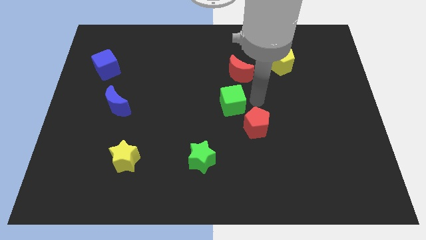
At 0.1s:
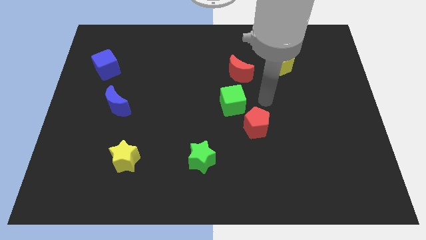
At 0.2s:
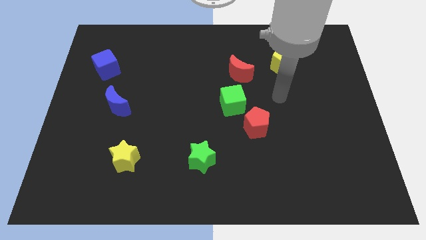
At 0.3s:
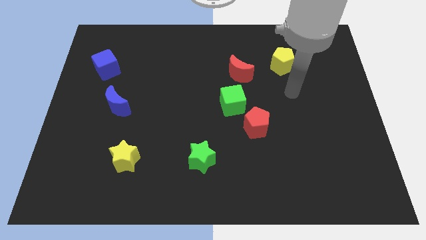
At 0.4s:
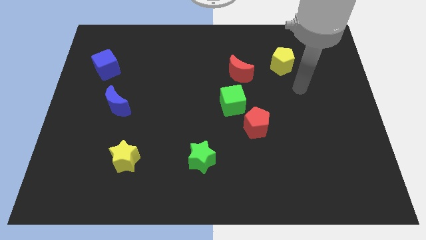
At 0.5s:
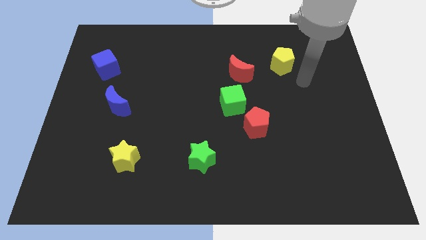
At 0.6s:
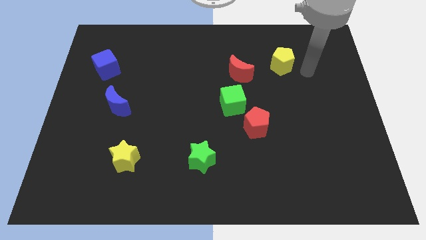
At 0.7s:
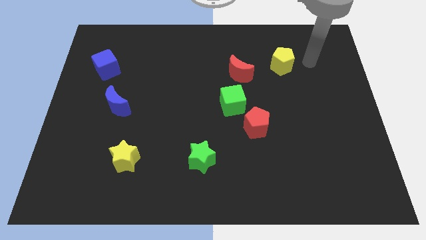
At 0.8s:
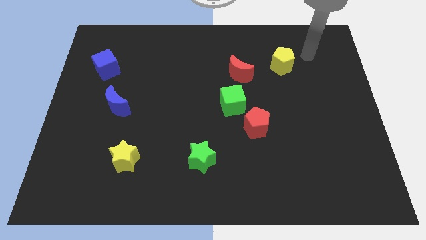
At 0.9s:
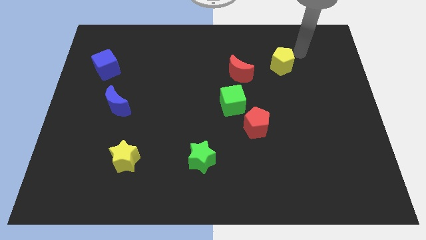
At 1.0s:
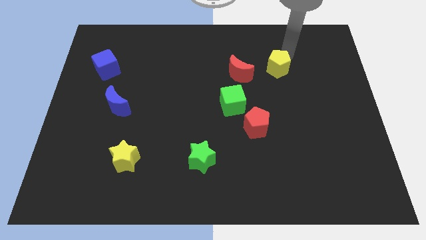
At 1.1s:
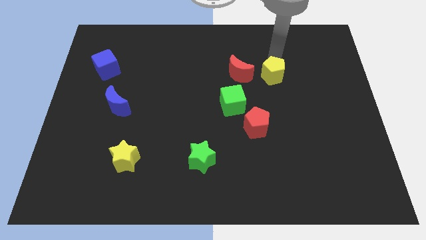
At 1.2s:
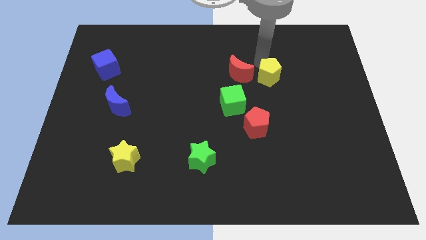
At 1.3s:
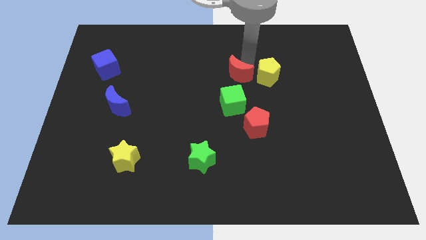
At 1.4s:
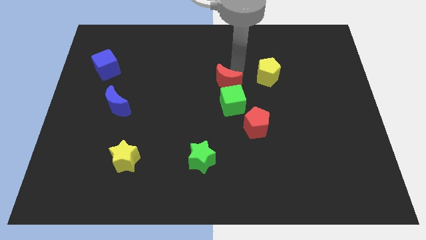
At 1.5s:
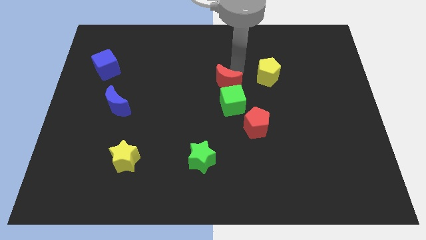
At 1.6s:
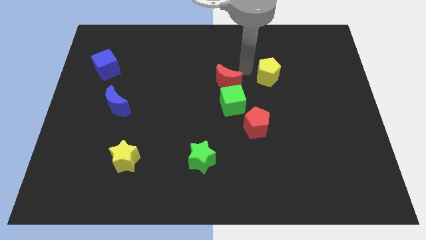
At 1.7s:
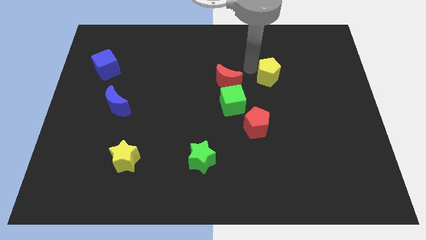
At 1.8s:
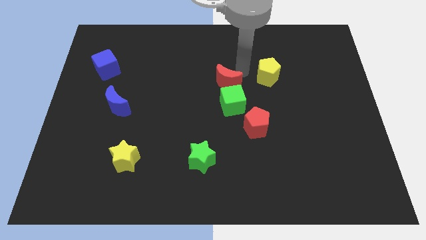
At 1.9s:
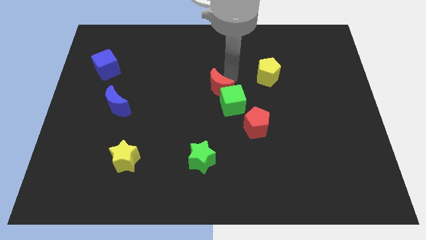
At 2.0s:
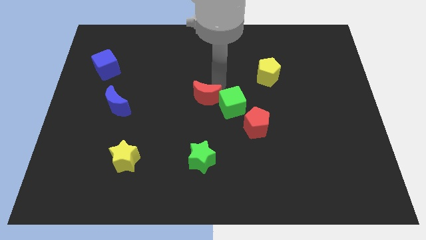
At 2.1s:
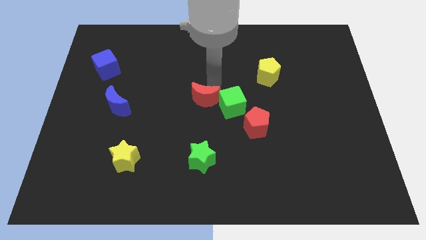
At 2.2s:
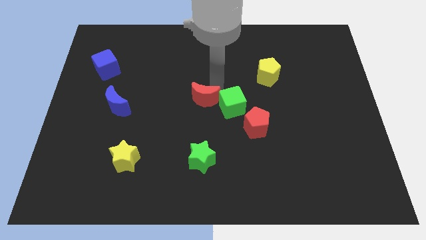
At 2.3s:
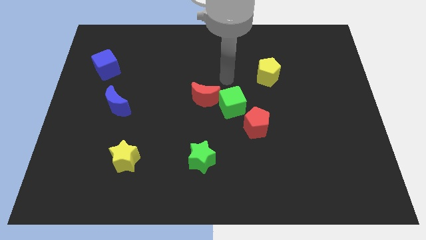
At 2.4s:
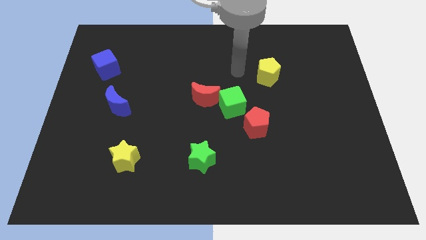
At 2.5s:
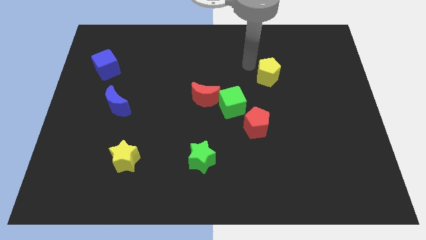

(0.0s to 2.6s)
push red crescent towards left side

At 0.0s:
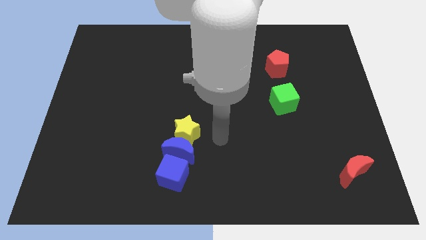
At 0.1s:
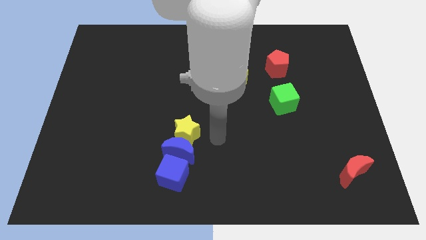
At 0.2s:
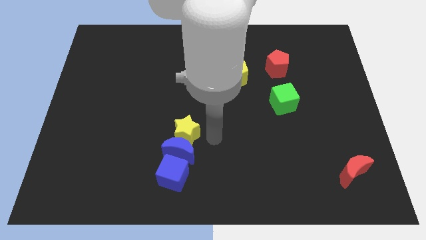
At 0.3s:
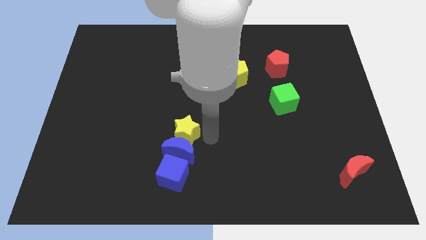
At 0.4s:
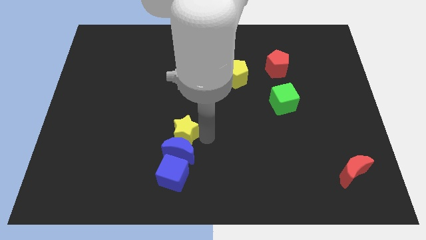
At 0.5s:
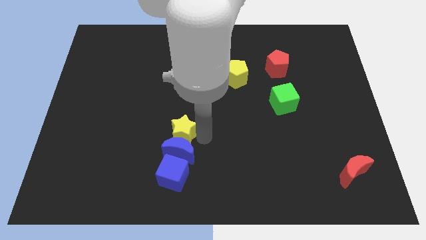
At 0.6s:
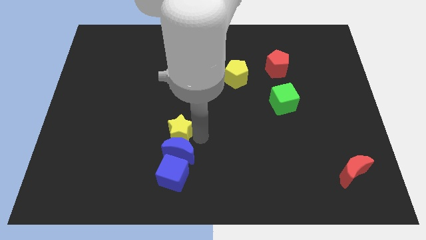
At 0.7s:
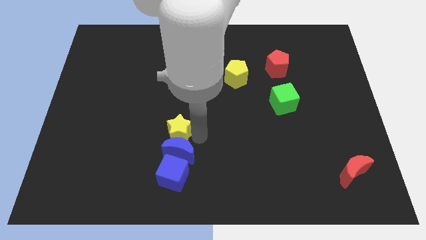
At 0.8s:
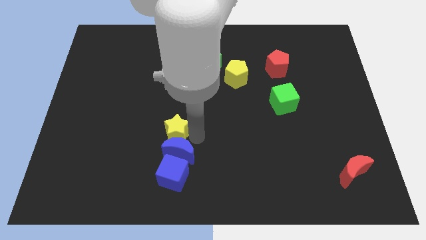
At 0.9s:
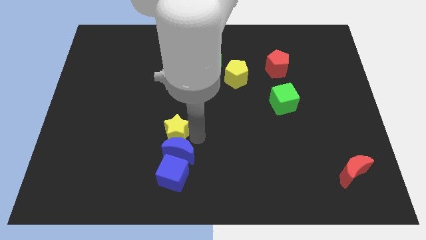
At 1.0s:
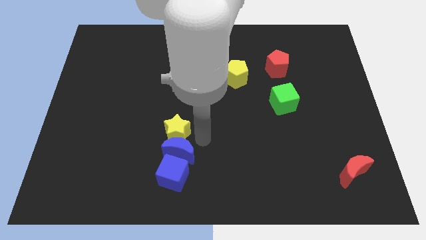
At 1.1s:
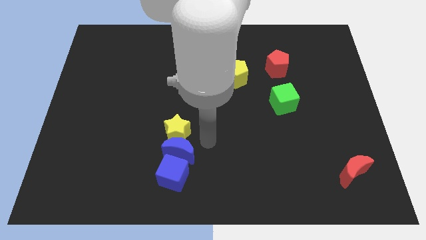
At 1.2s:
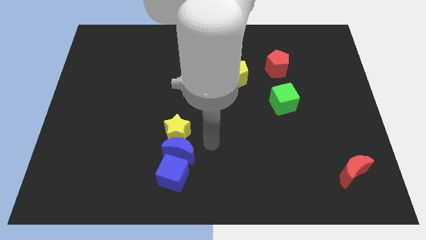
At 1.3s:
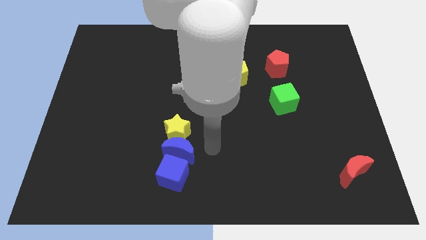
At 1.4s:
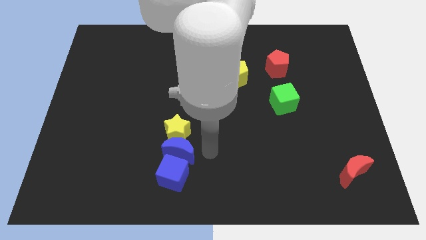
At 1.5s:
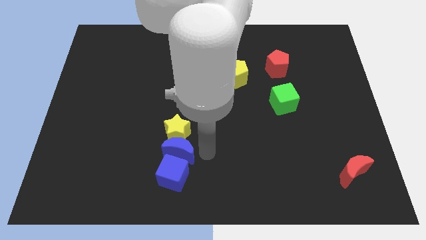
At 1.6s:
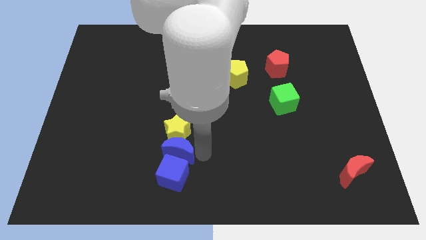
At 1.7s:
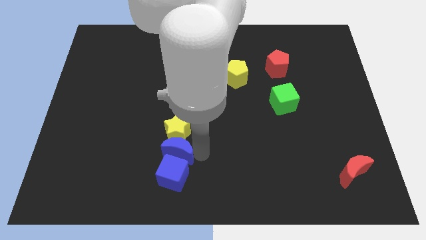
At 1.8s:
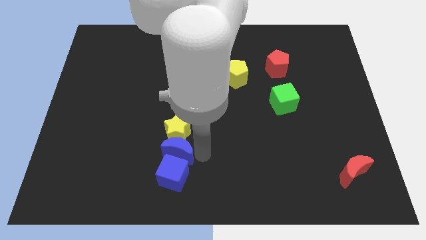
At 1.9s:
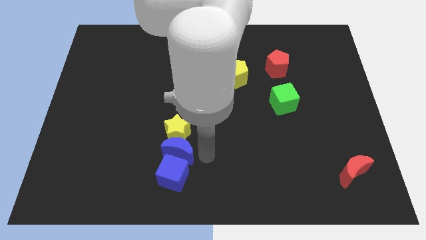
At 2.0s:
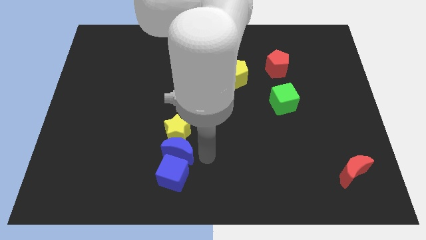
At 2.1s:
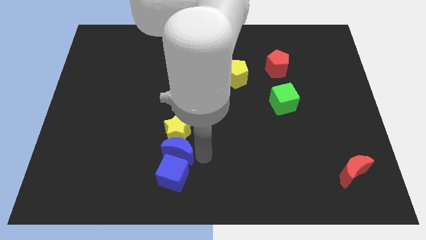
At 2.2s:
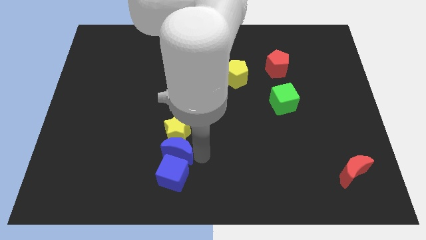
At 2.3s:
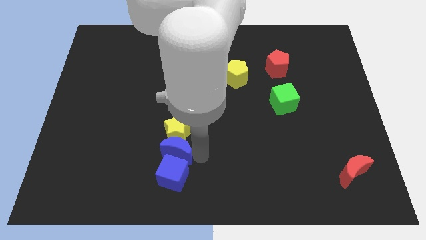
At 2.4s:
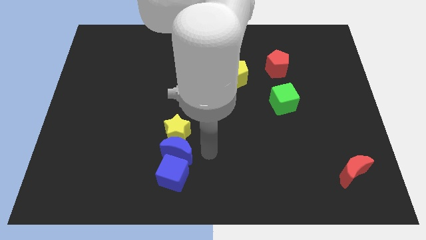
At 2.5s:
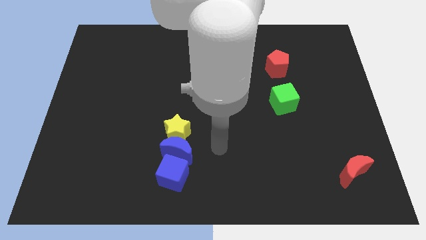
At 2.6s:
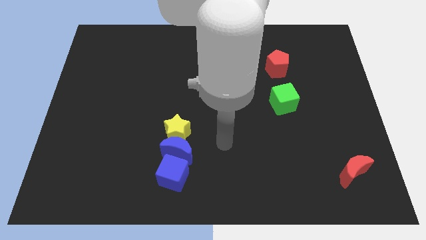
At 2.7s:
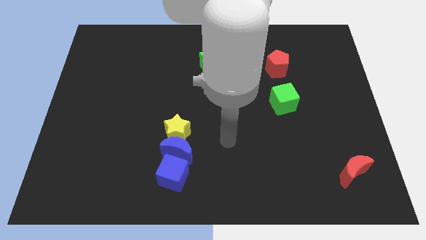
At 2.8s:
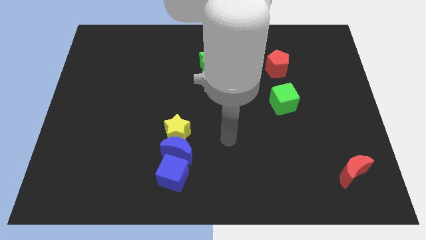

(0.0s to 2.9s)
push the yellow star and the blue crescent slightly to the left

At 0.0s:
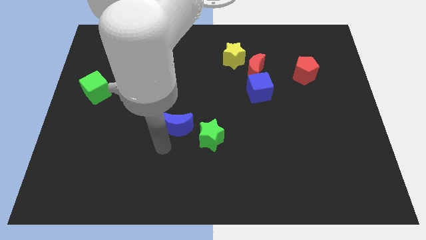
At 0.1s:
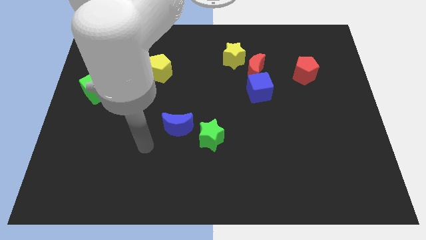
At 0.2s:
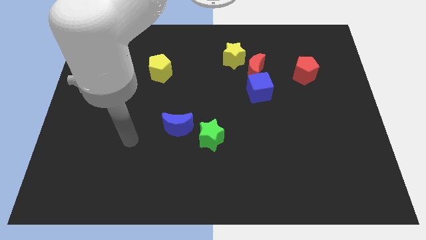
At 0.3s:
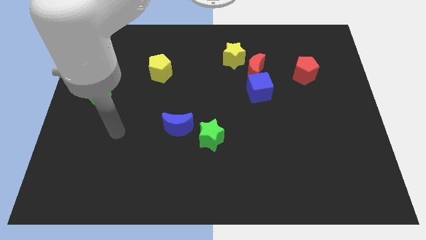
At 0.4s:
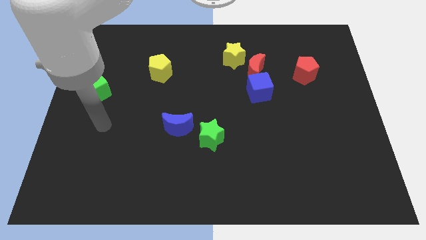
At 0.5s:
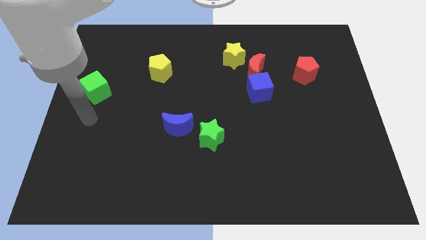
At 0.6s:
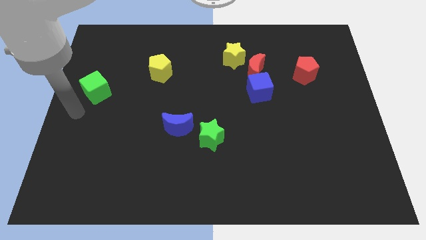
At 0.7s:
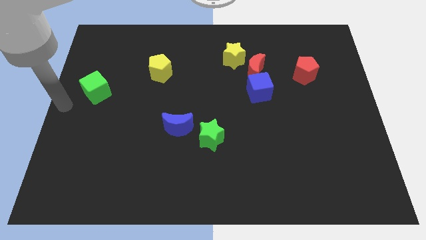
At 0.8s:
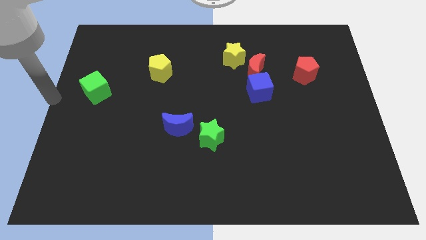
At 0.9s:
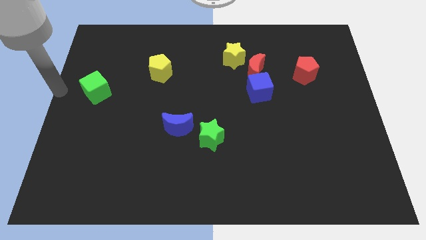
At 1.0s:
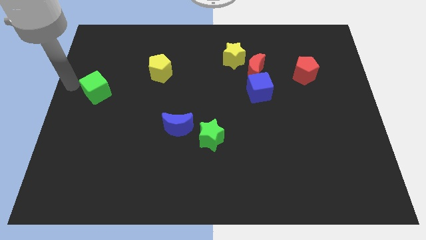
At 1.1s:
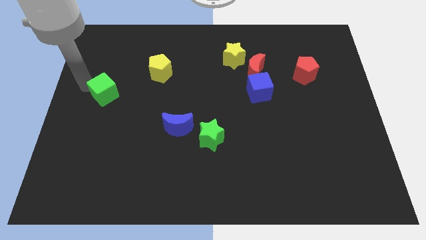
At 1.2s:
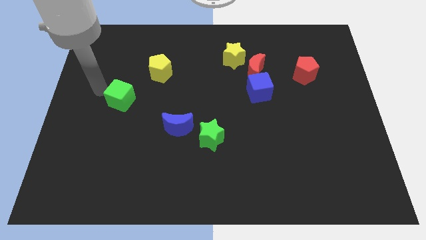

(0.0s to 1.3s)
push the green cube downwards

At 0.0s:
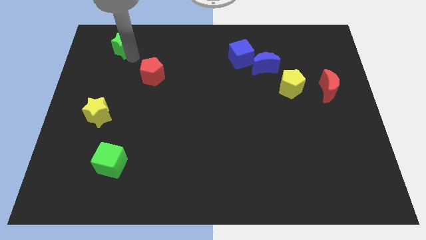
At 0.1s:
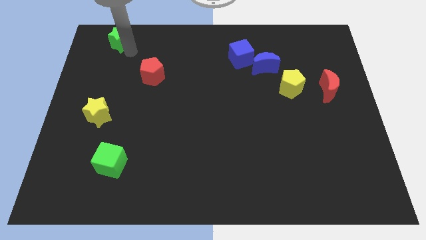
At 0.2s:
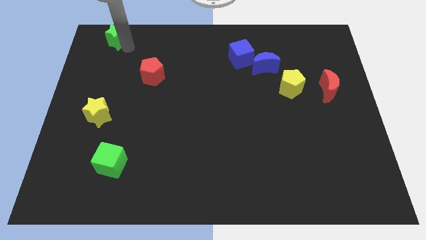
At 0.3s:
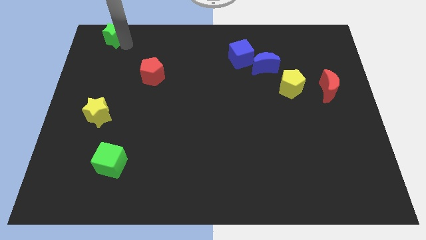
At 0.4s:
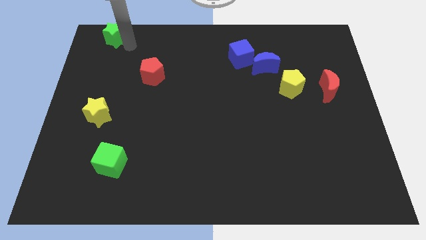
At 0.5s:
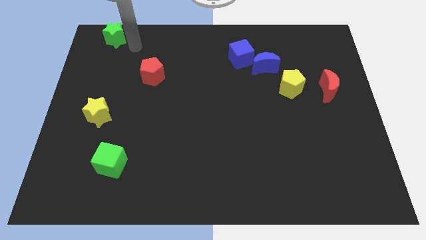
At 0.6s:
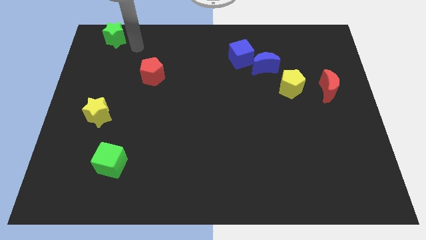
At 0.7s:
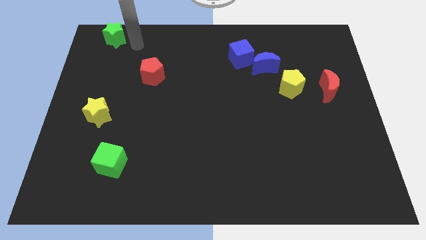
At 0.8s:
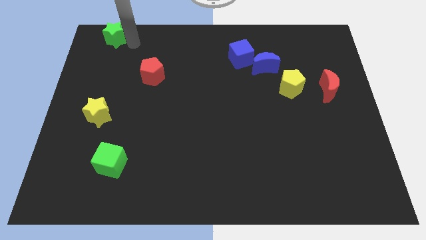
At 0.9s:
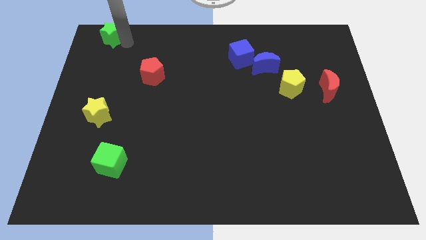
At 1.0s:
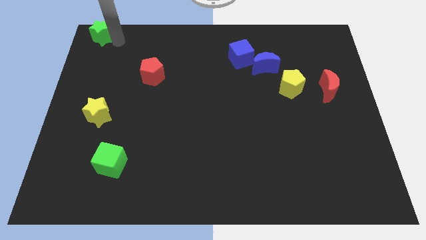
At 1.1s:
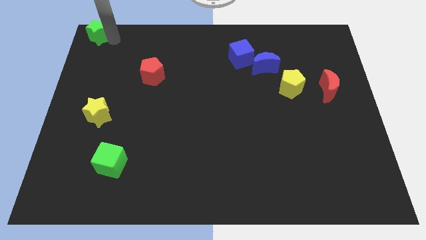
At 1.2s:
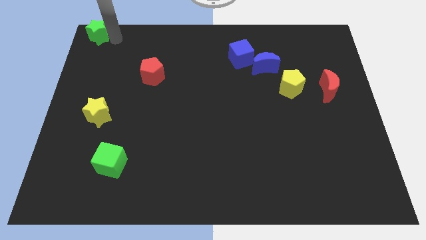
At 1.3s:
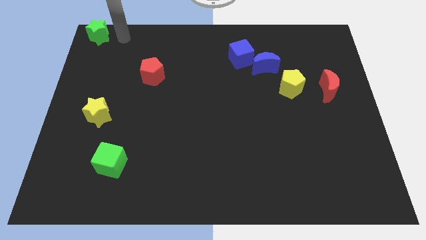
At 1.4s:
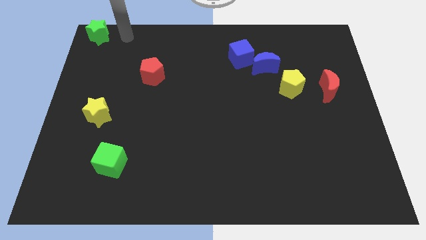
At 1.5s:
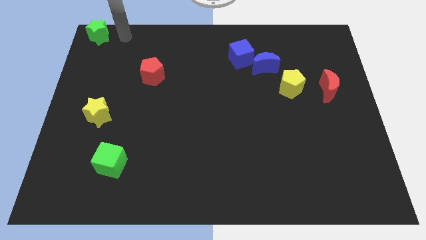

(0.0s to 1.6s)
move the green star to the top left corner of the board

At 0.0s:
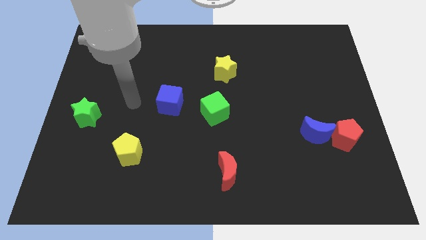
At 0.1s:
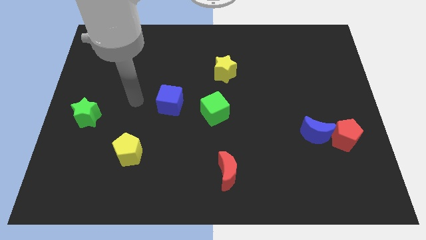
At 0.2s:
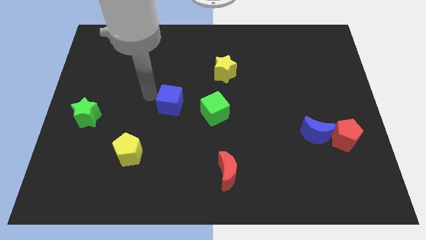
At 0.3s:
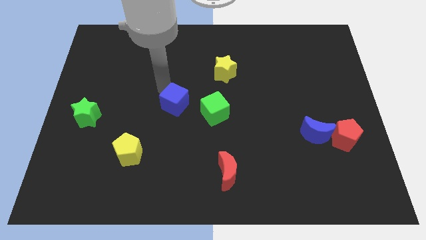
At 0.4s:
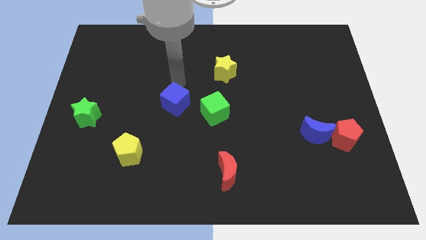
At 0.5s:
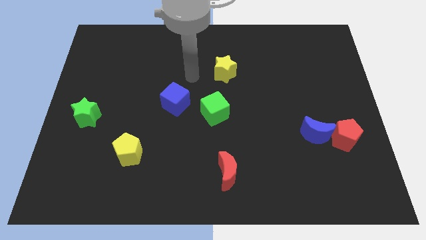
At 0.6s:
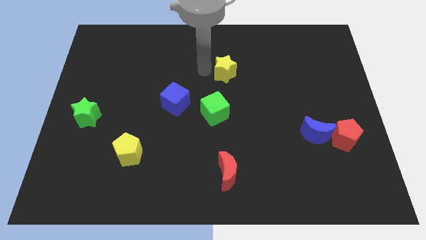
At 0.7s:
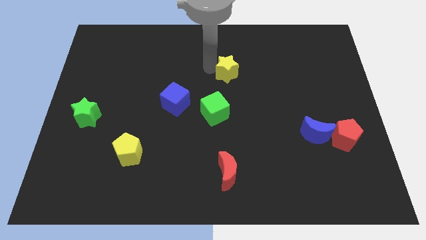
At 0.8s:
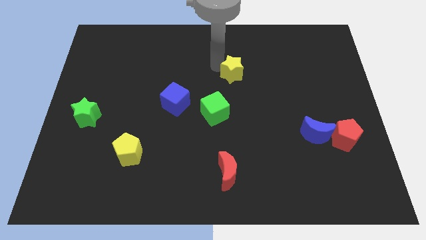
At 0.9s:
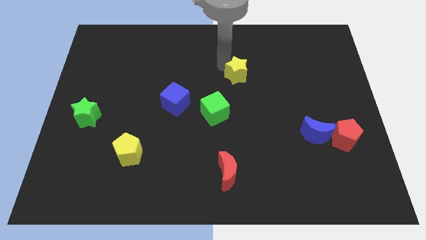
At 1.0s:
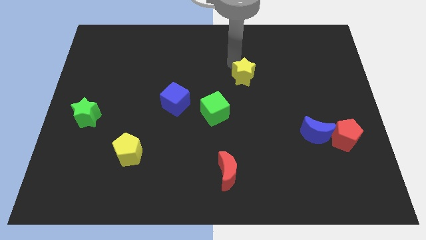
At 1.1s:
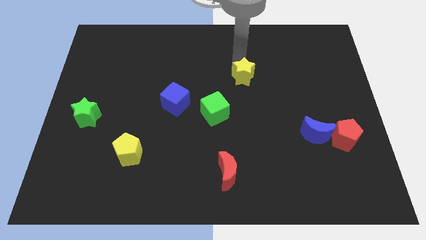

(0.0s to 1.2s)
place your hand above the yellow star
